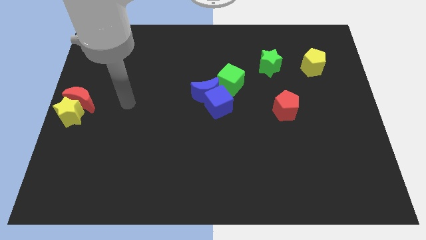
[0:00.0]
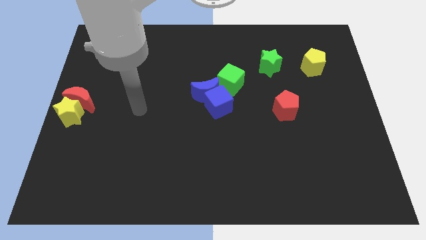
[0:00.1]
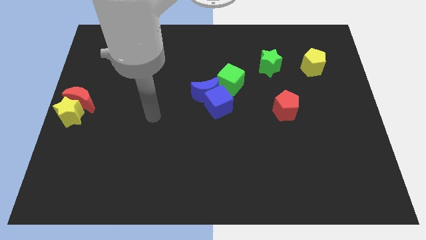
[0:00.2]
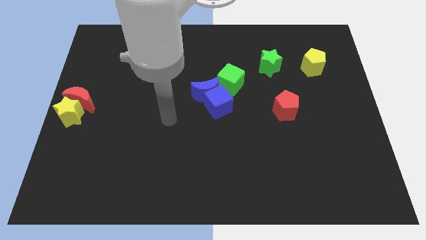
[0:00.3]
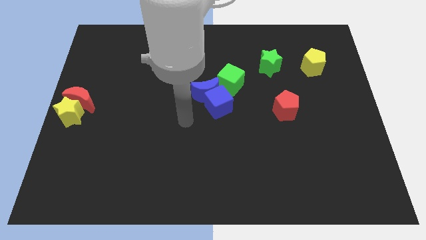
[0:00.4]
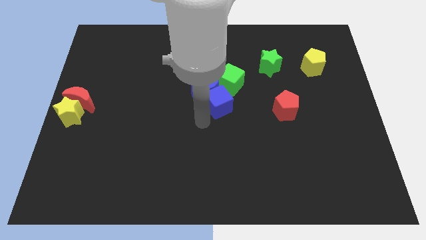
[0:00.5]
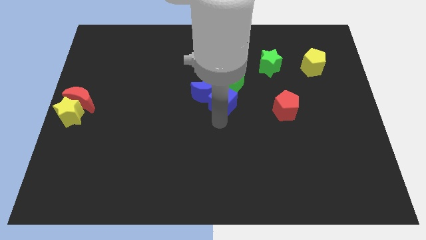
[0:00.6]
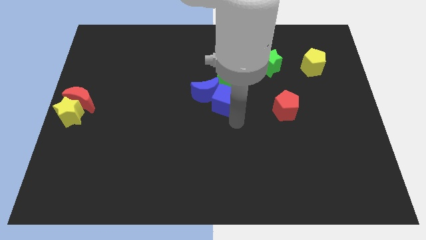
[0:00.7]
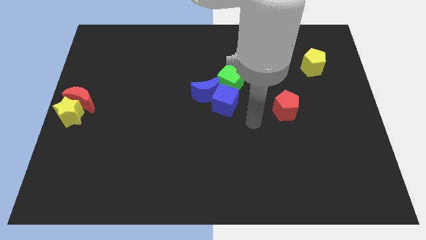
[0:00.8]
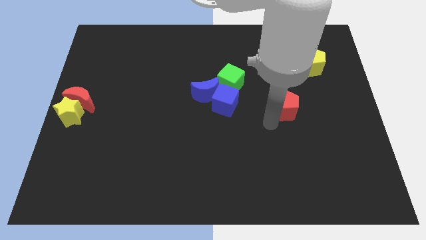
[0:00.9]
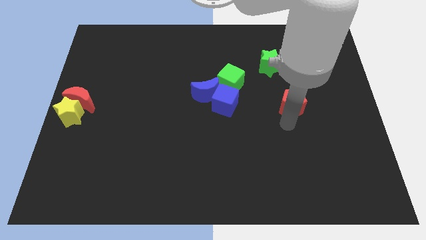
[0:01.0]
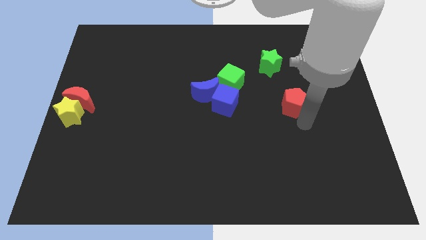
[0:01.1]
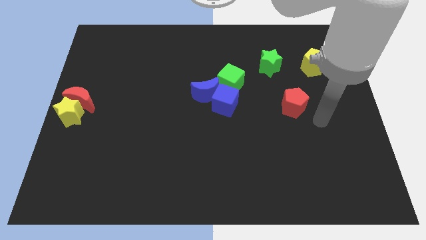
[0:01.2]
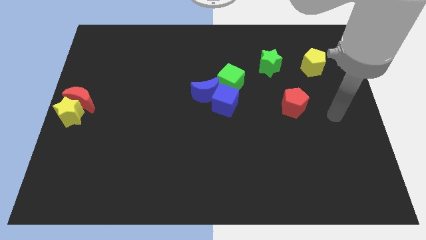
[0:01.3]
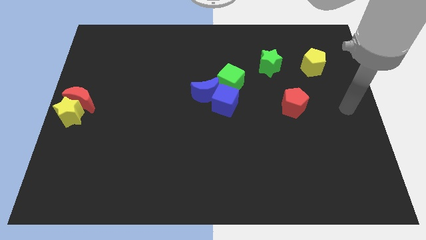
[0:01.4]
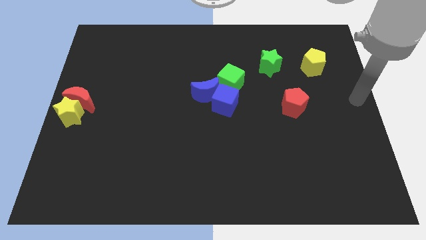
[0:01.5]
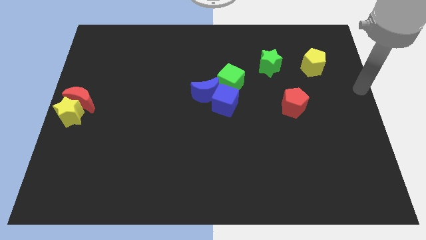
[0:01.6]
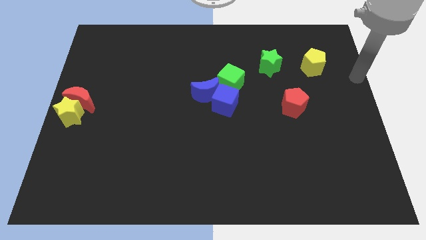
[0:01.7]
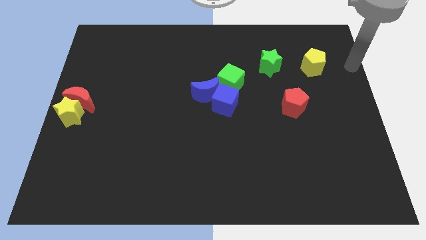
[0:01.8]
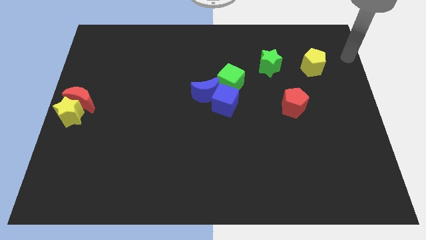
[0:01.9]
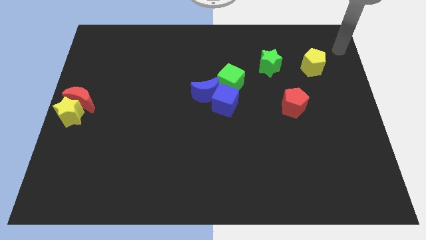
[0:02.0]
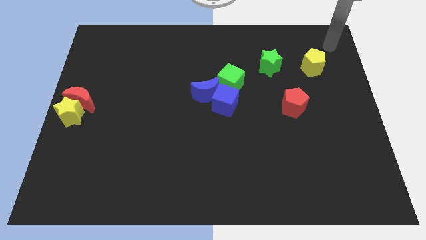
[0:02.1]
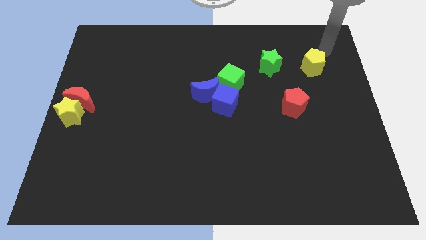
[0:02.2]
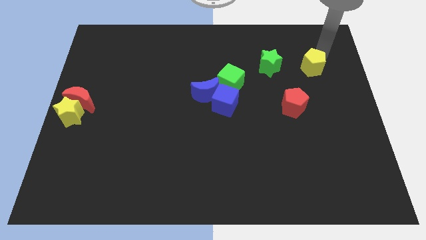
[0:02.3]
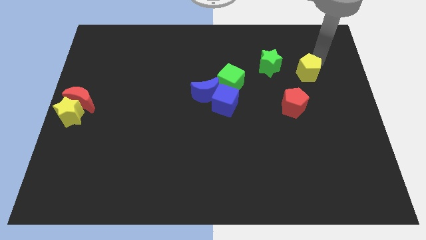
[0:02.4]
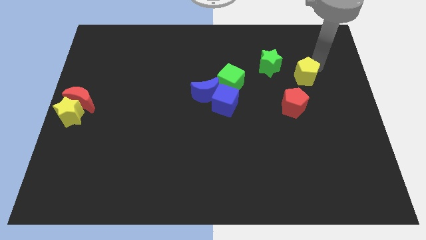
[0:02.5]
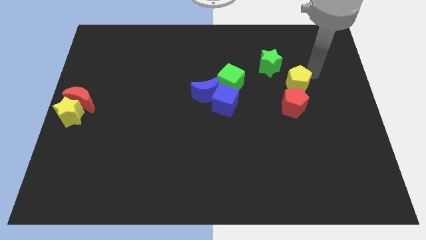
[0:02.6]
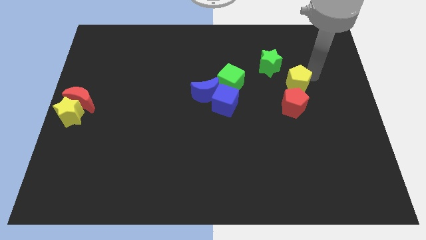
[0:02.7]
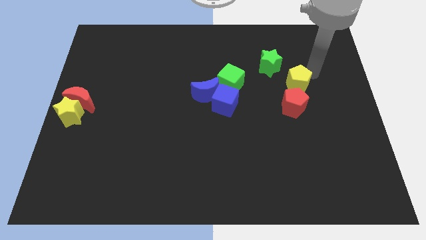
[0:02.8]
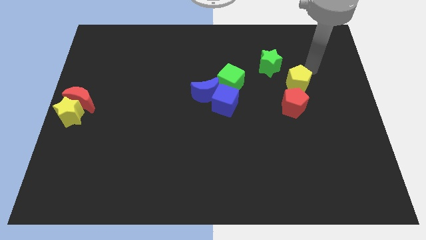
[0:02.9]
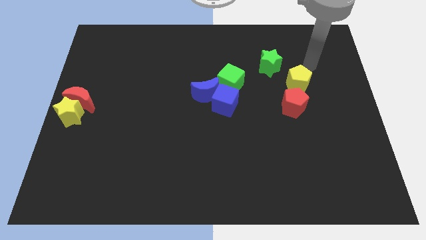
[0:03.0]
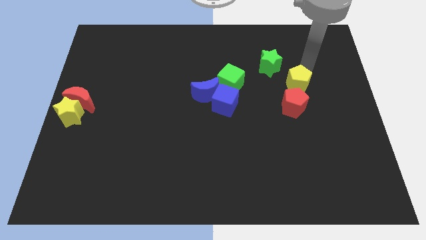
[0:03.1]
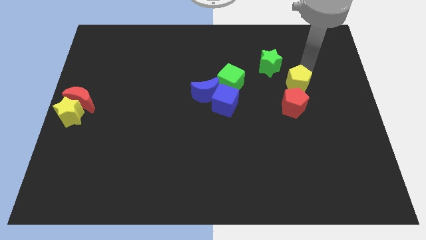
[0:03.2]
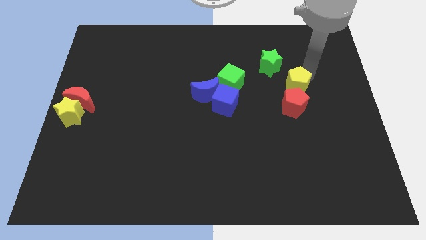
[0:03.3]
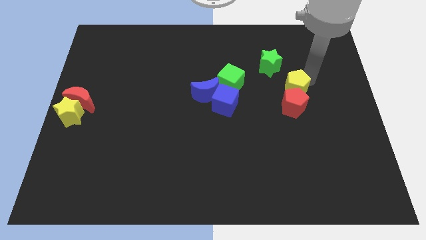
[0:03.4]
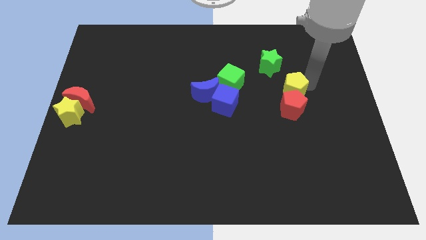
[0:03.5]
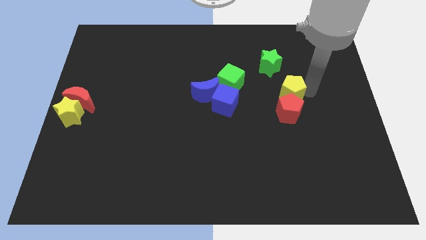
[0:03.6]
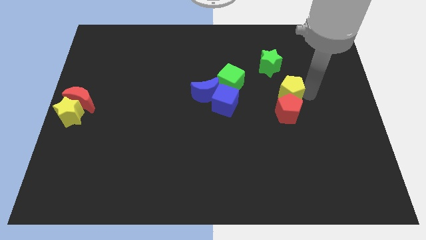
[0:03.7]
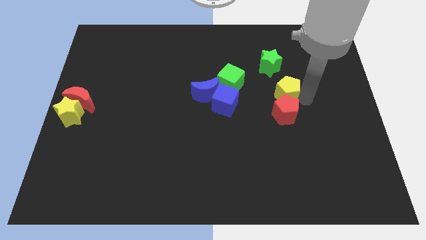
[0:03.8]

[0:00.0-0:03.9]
put the yellow pentagon on the top of the red pentagon

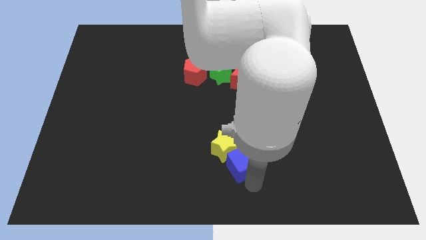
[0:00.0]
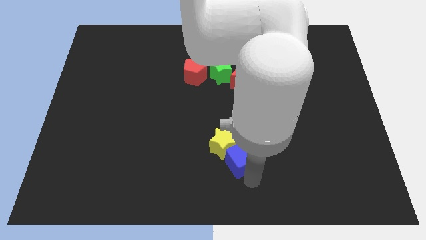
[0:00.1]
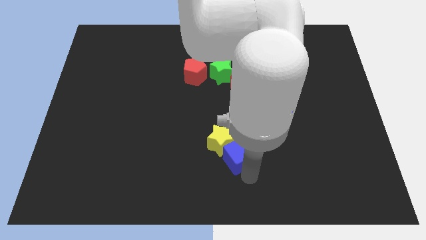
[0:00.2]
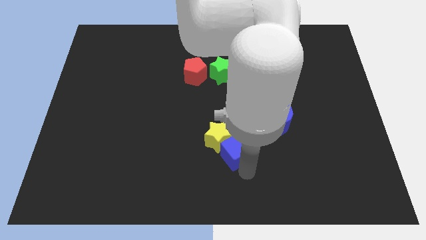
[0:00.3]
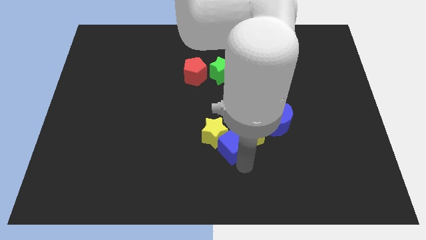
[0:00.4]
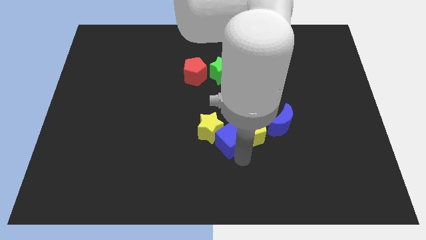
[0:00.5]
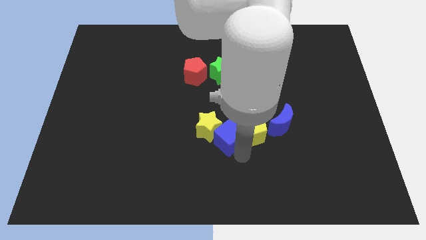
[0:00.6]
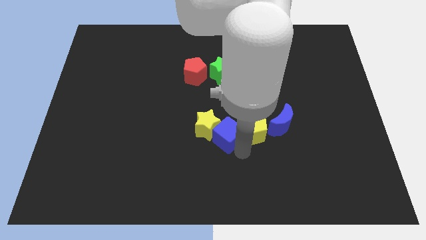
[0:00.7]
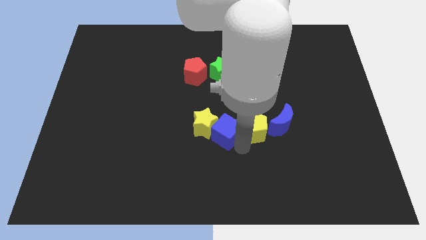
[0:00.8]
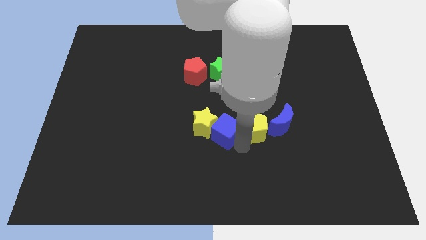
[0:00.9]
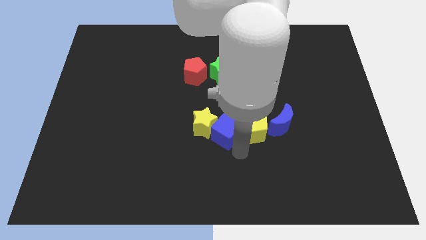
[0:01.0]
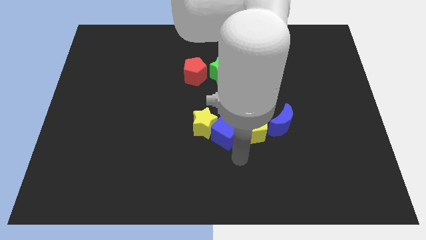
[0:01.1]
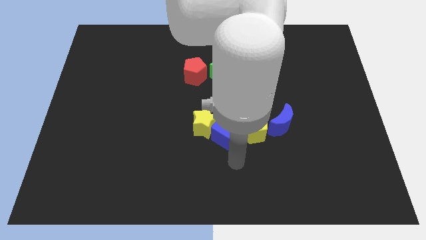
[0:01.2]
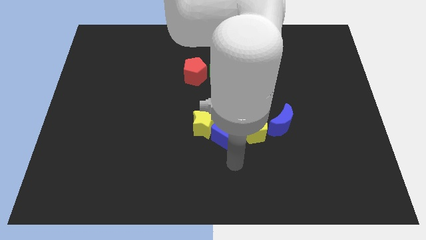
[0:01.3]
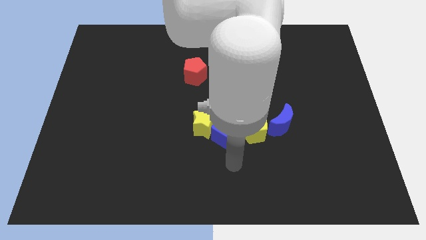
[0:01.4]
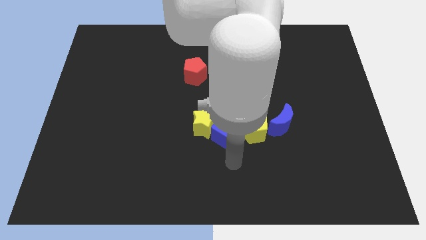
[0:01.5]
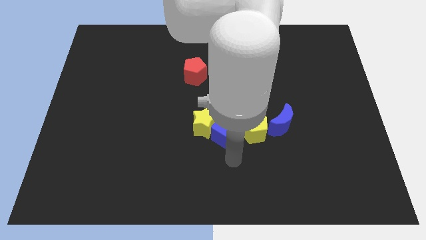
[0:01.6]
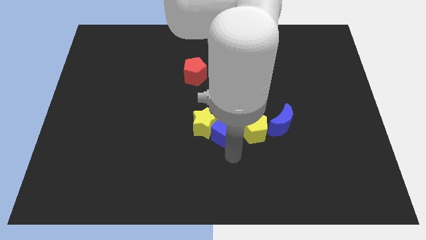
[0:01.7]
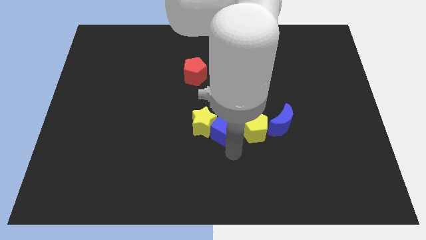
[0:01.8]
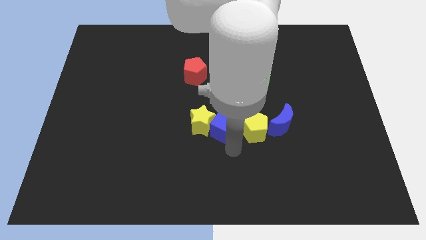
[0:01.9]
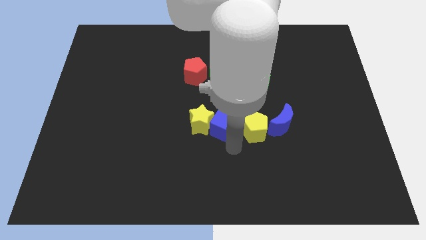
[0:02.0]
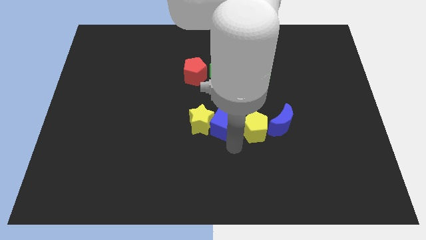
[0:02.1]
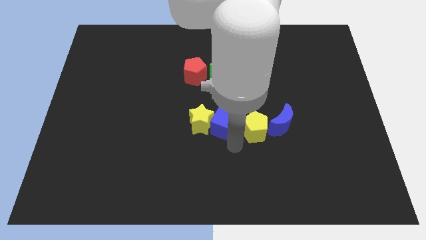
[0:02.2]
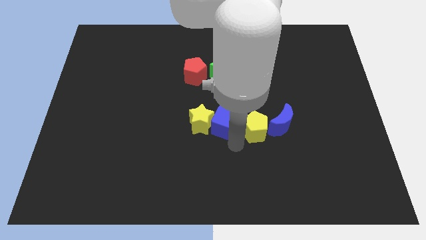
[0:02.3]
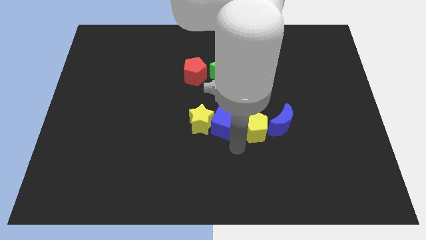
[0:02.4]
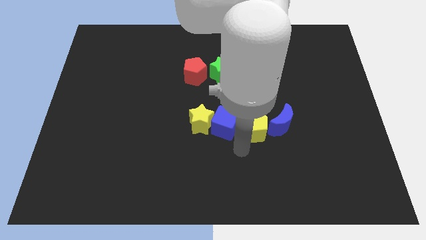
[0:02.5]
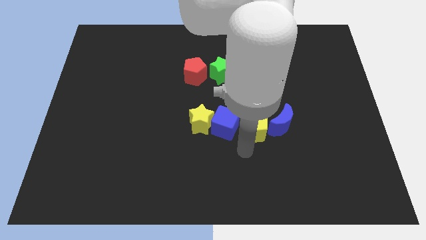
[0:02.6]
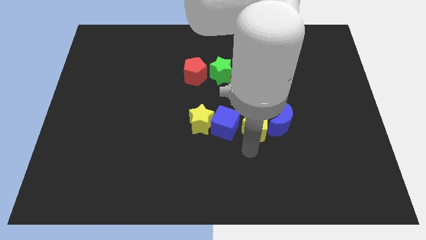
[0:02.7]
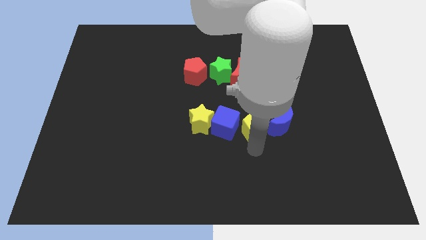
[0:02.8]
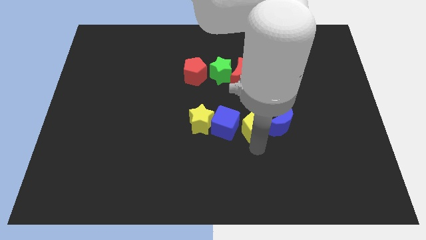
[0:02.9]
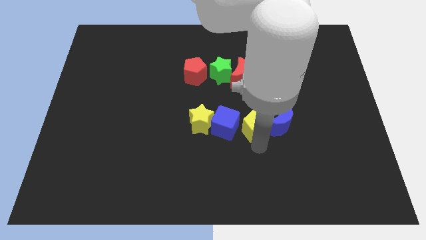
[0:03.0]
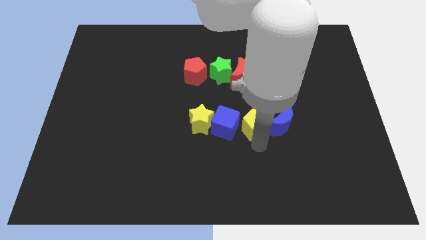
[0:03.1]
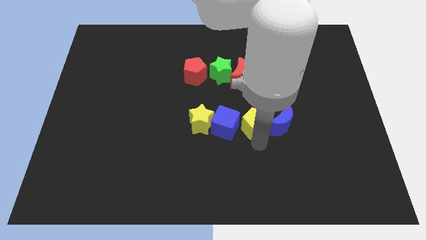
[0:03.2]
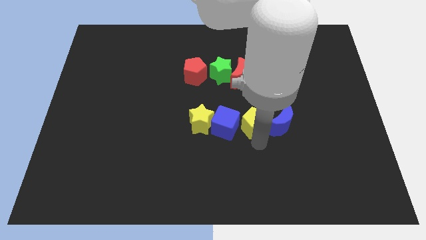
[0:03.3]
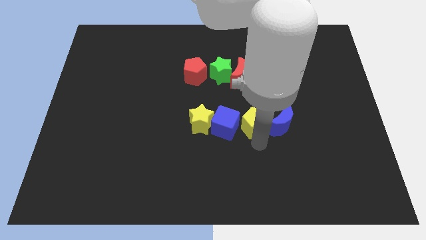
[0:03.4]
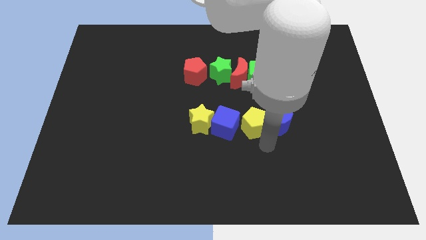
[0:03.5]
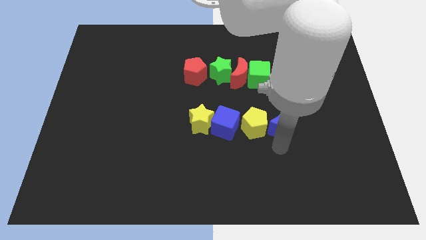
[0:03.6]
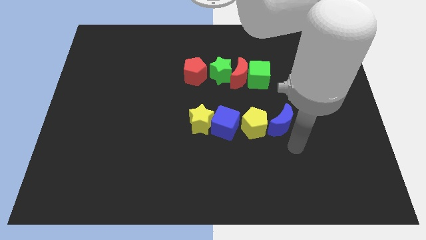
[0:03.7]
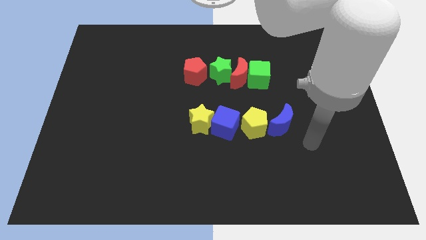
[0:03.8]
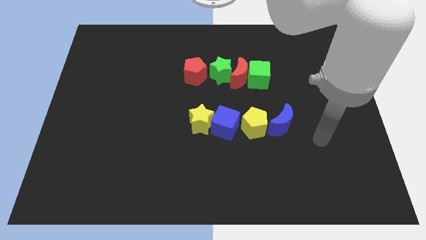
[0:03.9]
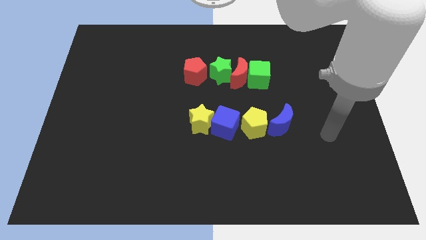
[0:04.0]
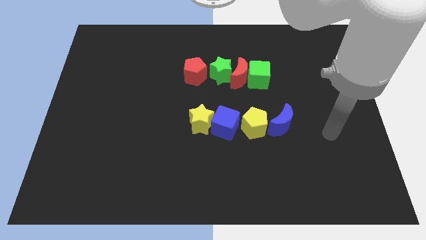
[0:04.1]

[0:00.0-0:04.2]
move blue and yellow blocks in a horizontal position

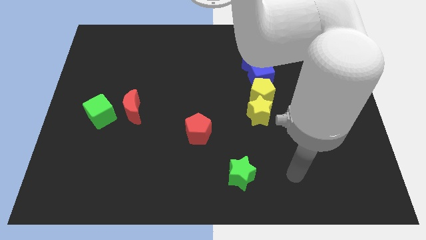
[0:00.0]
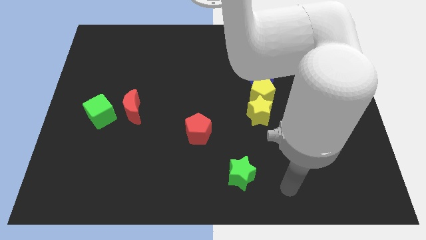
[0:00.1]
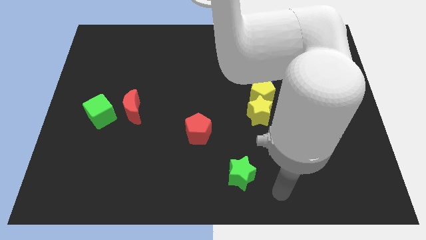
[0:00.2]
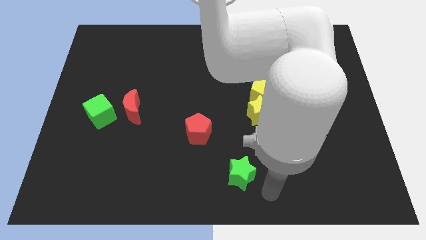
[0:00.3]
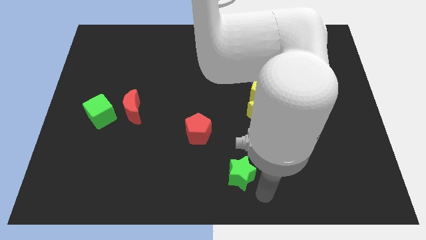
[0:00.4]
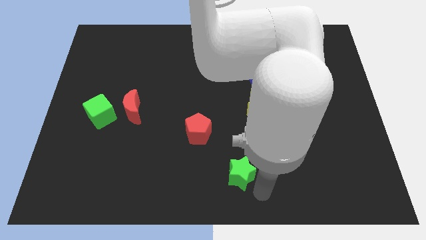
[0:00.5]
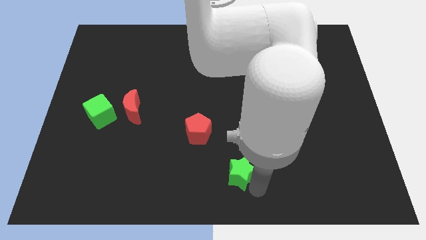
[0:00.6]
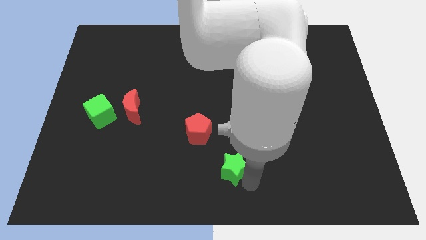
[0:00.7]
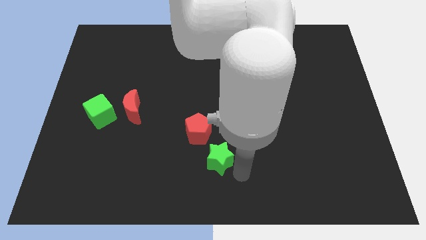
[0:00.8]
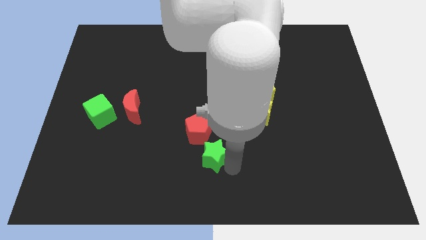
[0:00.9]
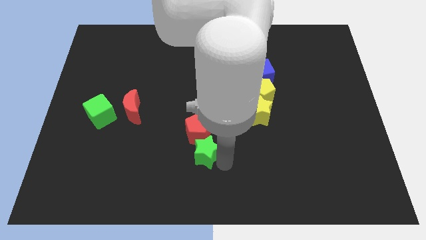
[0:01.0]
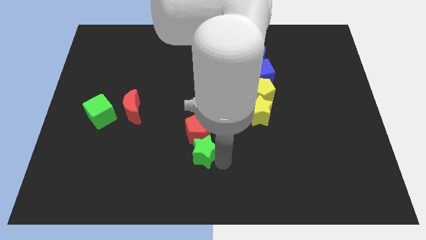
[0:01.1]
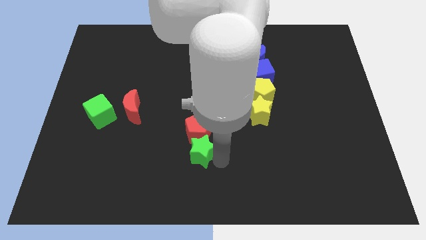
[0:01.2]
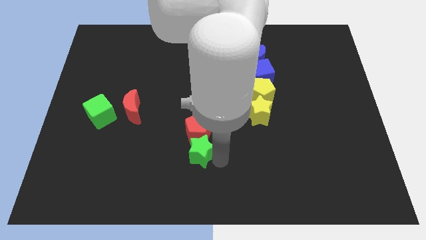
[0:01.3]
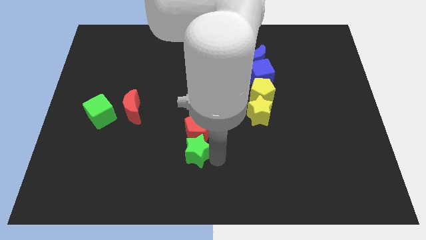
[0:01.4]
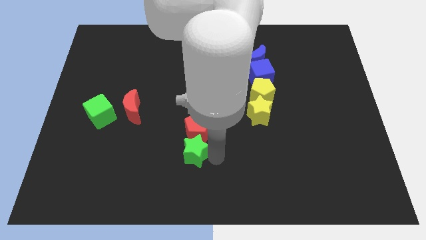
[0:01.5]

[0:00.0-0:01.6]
push the green cube to the bottom of the red pentagon
